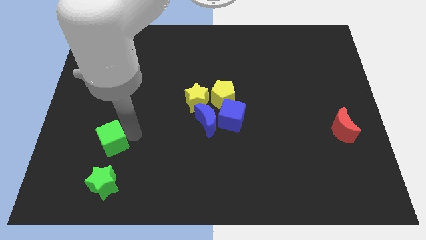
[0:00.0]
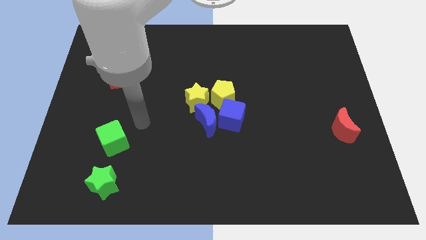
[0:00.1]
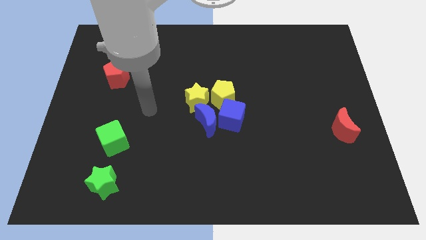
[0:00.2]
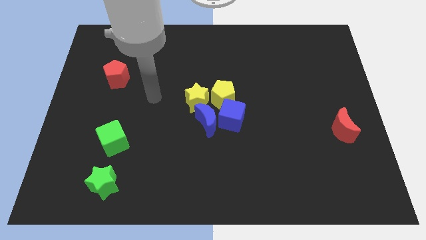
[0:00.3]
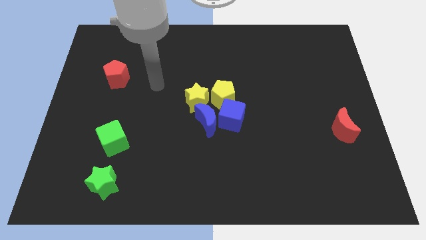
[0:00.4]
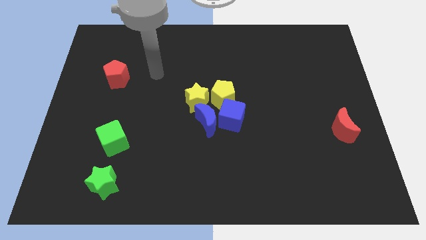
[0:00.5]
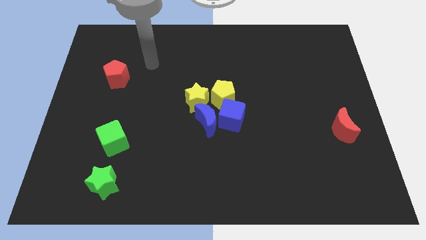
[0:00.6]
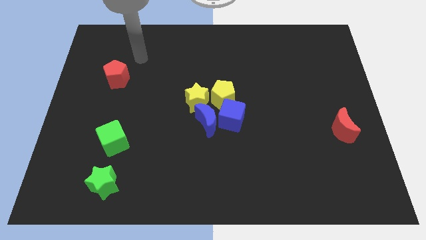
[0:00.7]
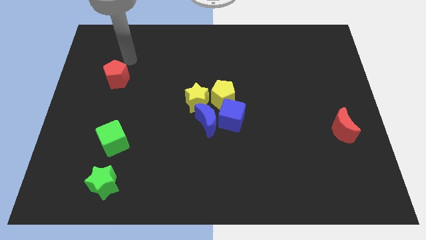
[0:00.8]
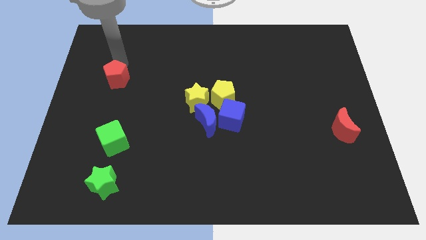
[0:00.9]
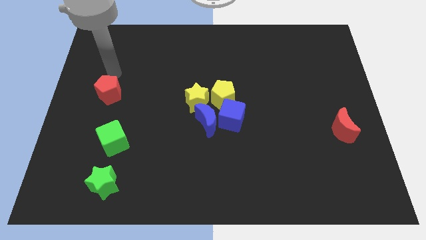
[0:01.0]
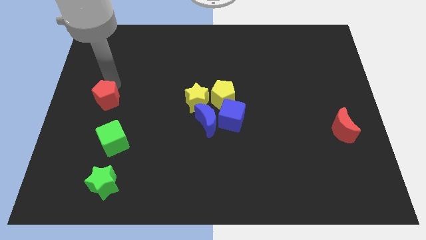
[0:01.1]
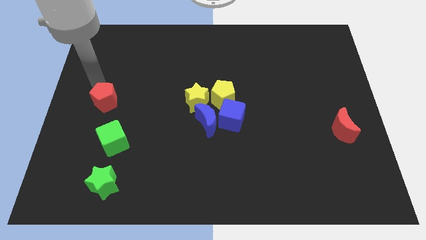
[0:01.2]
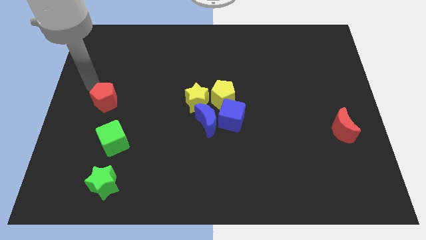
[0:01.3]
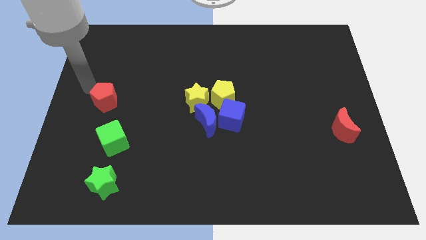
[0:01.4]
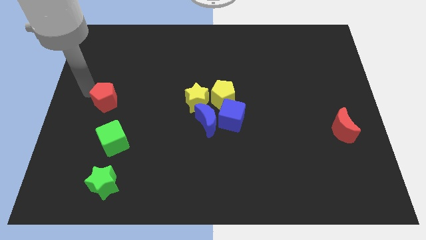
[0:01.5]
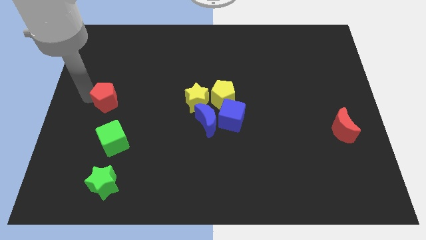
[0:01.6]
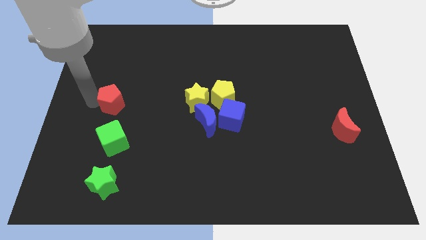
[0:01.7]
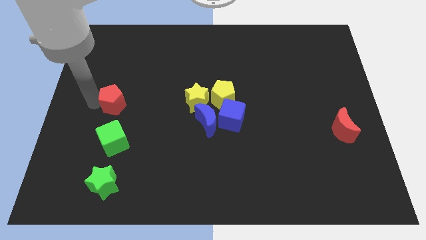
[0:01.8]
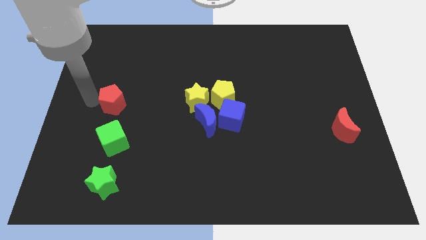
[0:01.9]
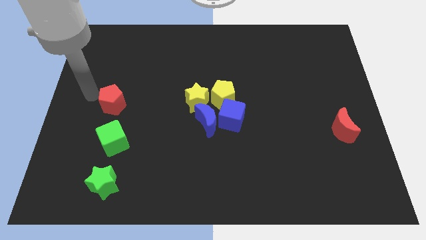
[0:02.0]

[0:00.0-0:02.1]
place the red pentagon at the top of green cube

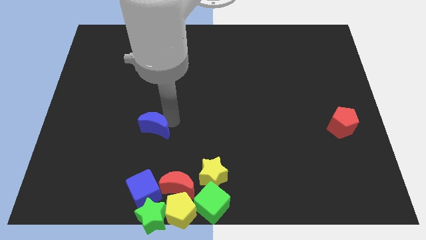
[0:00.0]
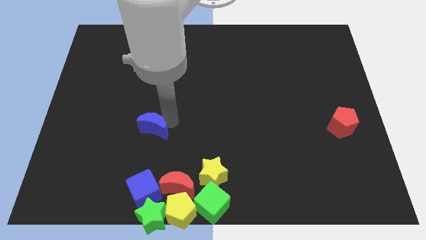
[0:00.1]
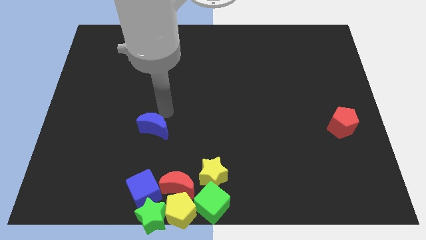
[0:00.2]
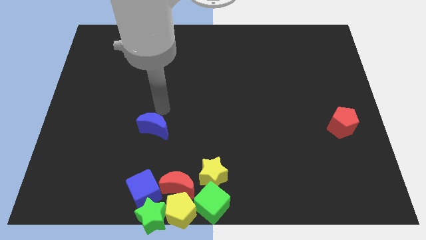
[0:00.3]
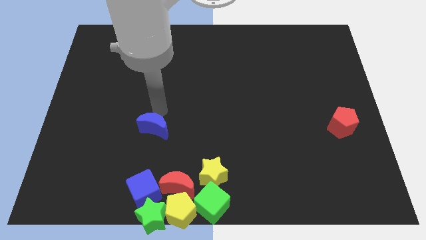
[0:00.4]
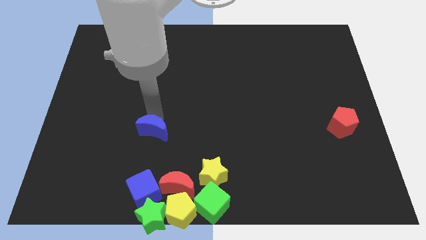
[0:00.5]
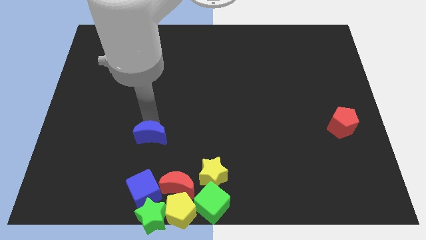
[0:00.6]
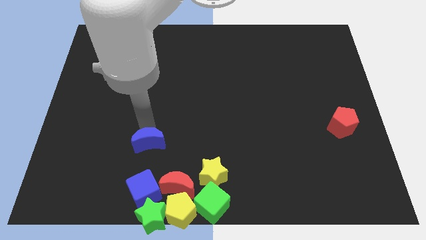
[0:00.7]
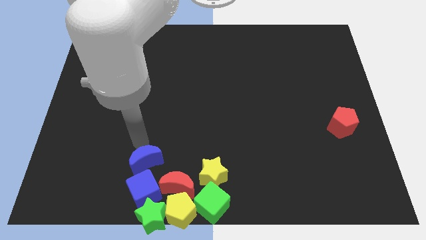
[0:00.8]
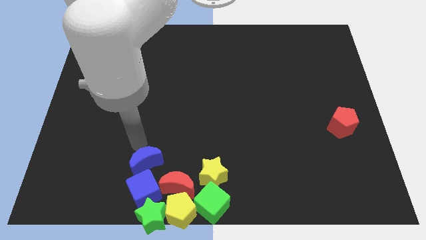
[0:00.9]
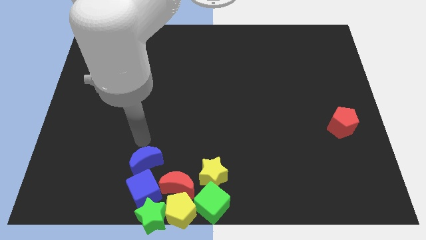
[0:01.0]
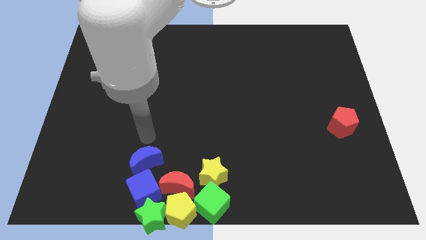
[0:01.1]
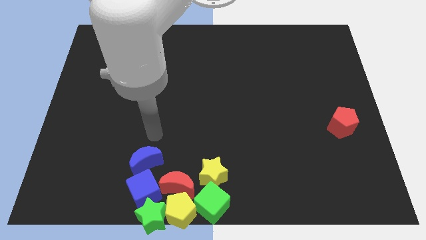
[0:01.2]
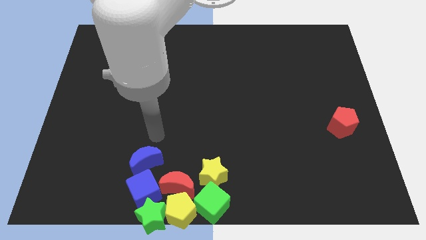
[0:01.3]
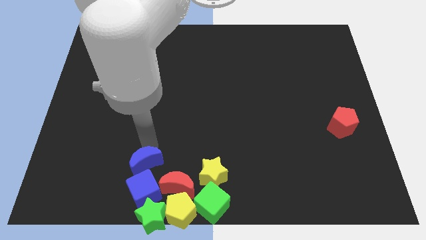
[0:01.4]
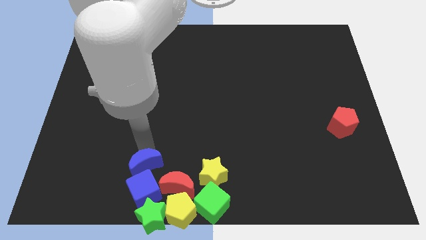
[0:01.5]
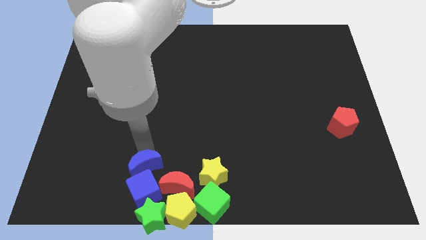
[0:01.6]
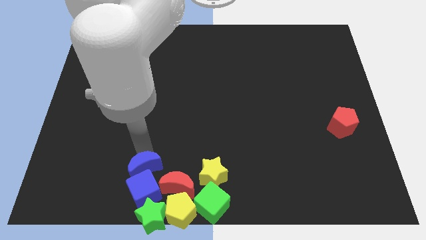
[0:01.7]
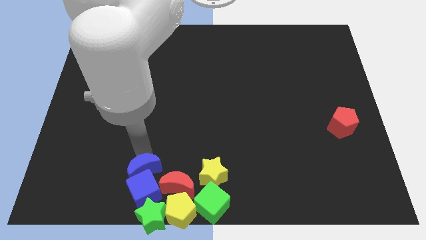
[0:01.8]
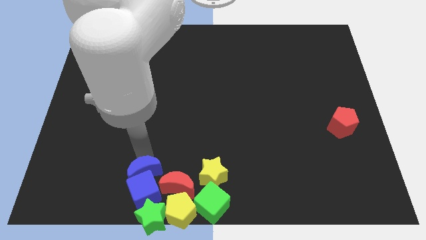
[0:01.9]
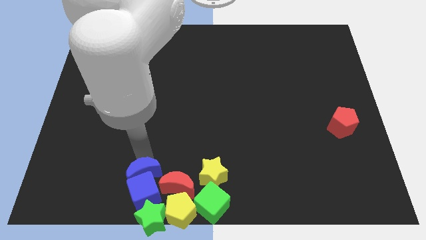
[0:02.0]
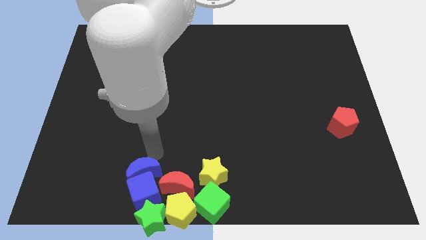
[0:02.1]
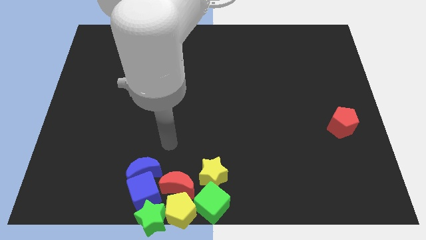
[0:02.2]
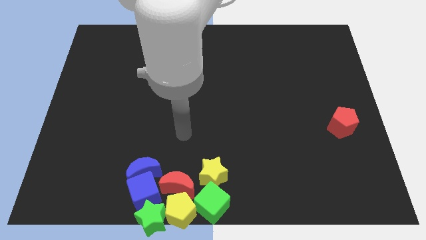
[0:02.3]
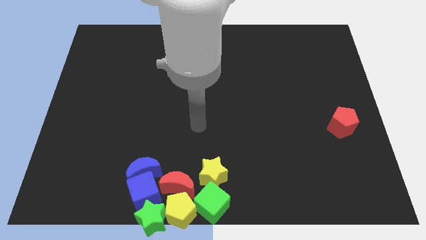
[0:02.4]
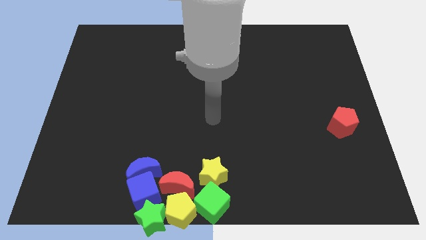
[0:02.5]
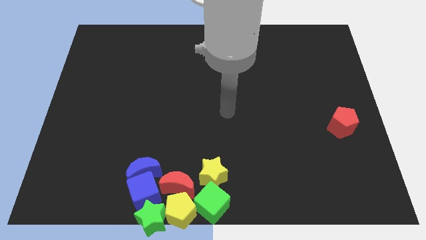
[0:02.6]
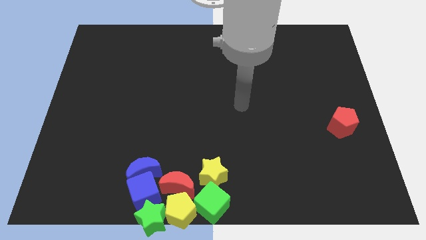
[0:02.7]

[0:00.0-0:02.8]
push the blue crescent into the top side of the blue cube

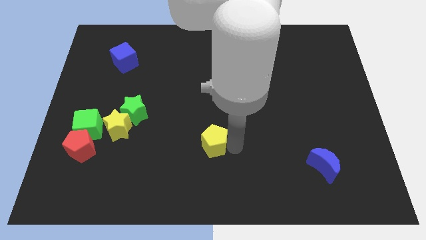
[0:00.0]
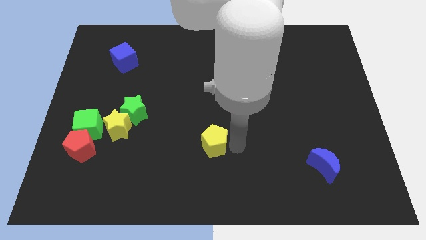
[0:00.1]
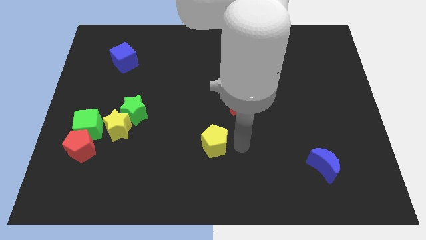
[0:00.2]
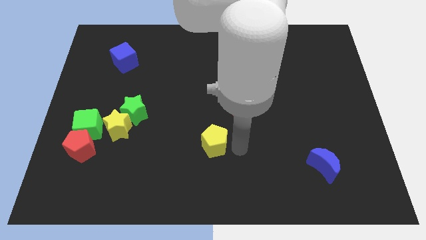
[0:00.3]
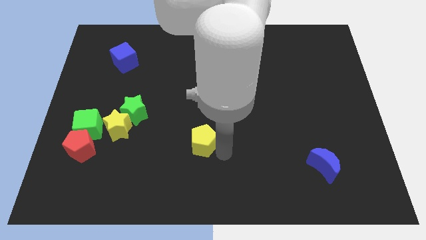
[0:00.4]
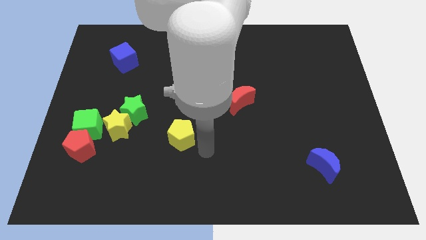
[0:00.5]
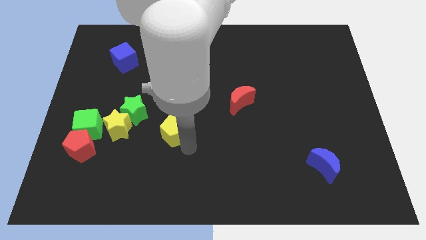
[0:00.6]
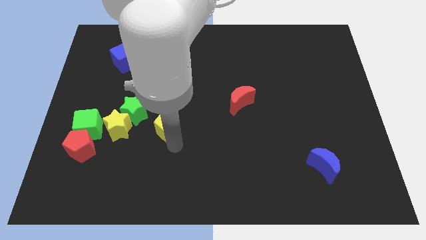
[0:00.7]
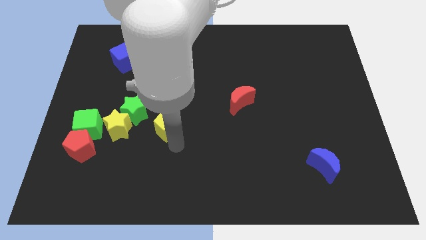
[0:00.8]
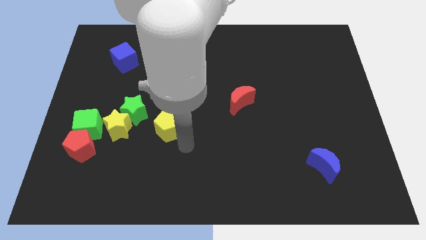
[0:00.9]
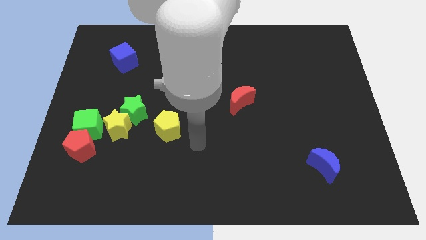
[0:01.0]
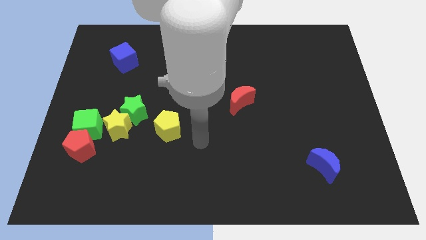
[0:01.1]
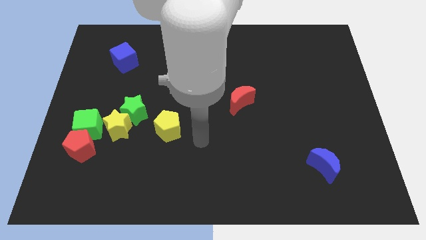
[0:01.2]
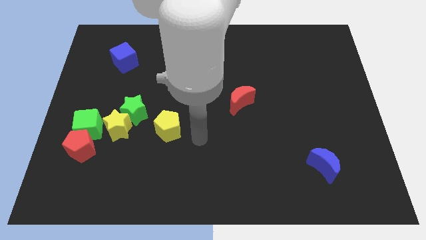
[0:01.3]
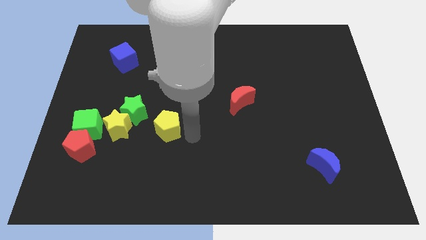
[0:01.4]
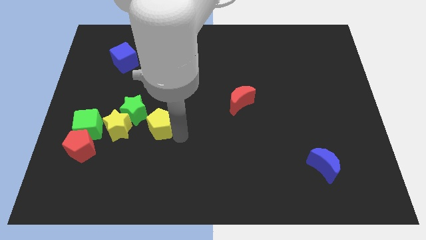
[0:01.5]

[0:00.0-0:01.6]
move the yellow pentagon towards the green star

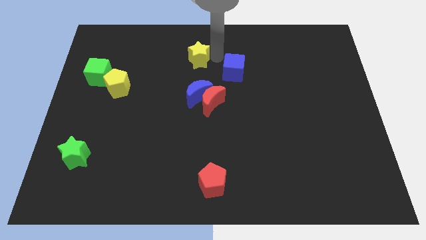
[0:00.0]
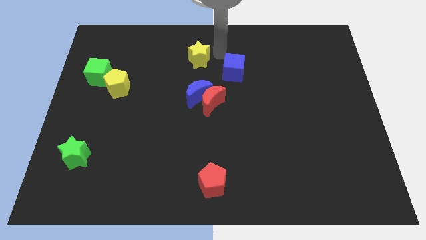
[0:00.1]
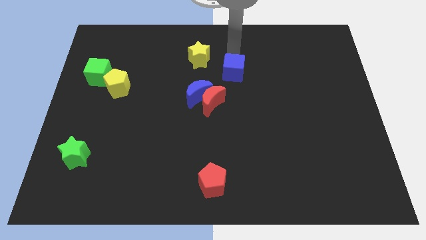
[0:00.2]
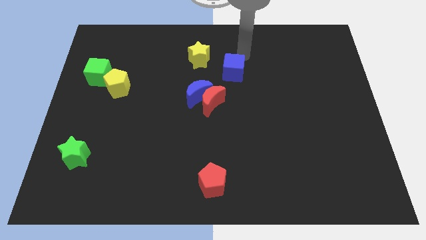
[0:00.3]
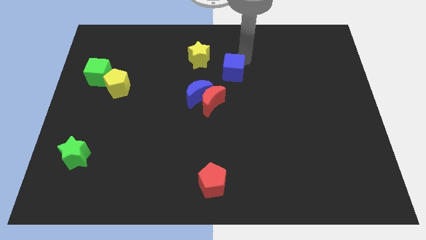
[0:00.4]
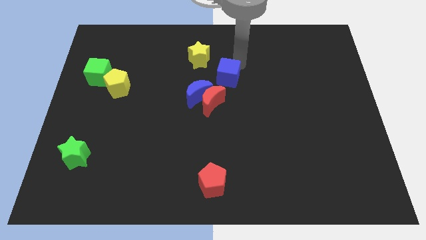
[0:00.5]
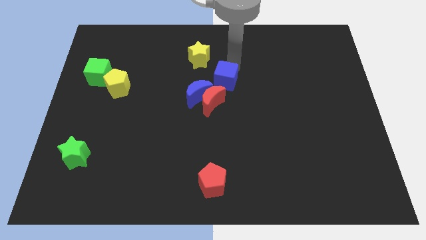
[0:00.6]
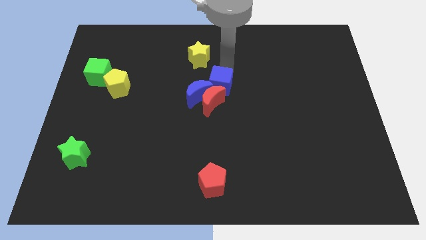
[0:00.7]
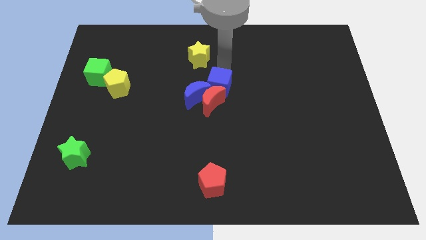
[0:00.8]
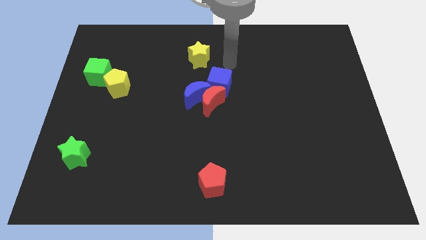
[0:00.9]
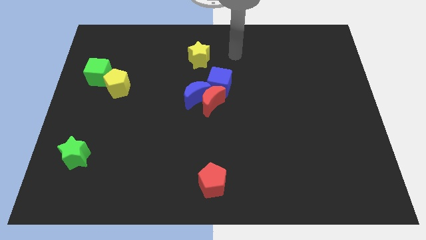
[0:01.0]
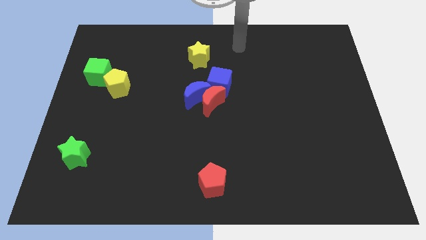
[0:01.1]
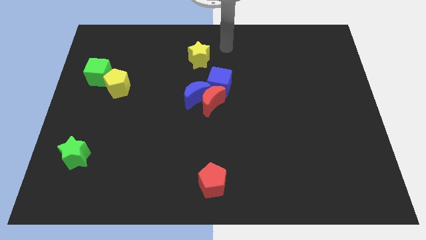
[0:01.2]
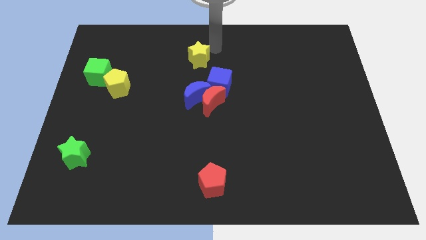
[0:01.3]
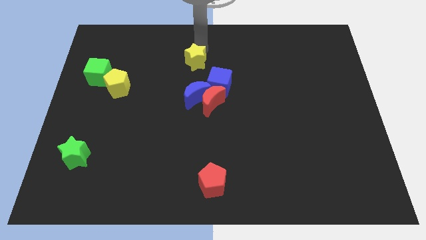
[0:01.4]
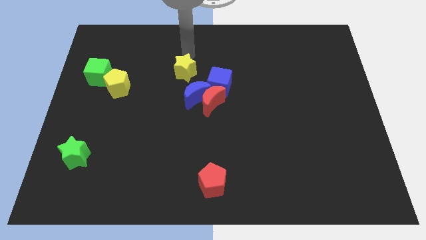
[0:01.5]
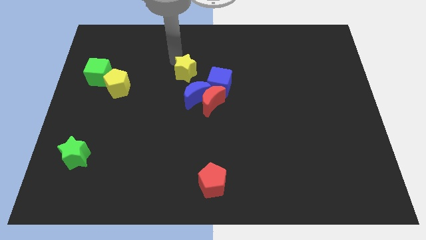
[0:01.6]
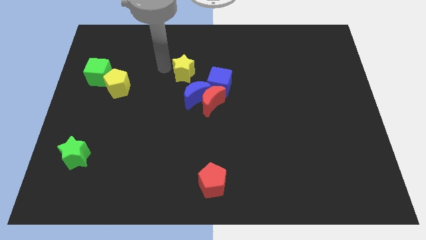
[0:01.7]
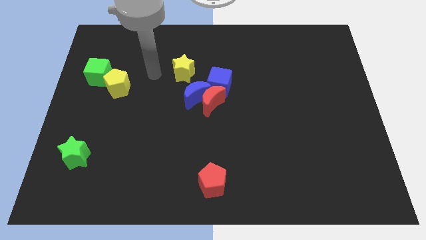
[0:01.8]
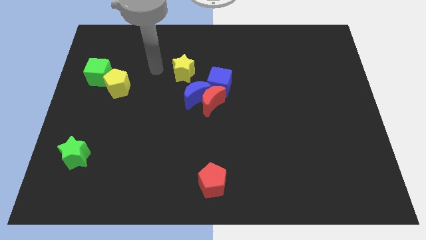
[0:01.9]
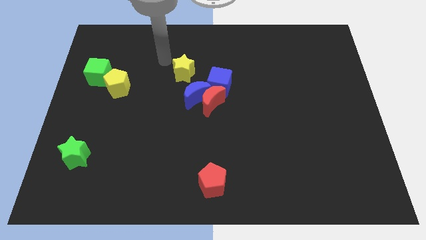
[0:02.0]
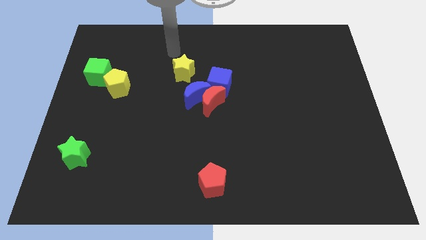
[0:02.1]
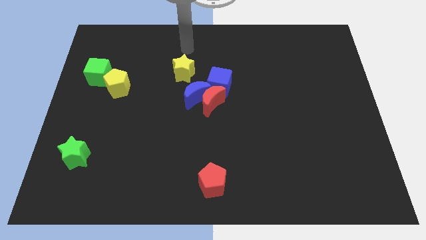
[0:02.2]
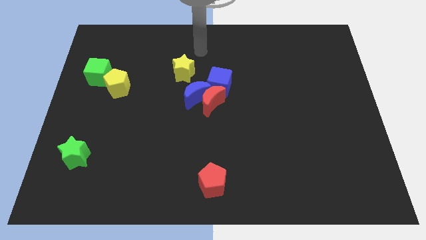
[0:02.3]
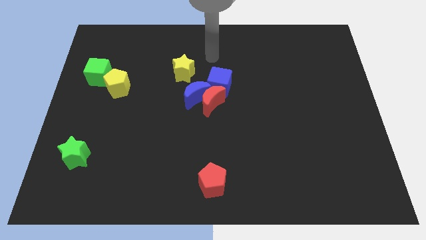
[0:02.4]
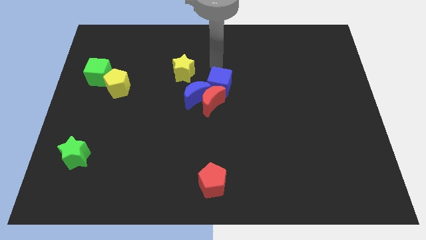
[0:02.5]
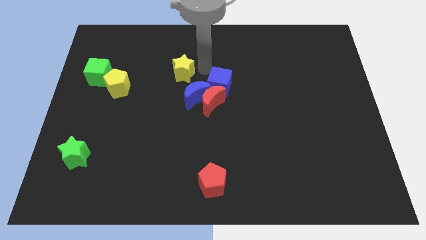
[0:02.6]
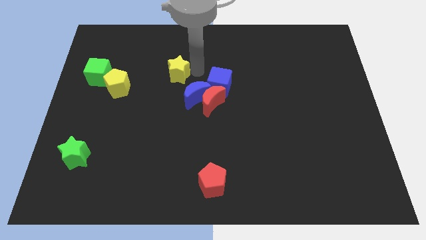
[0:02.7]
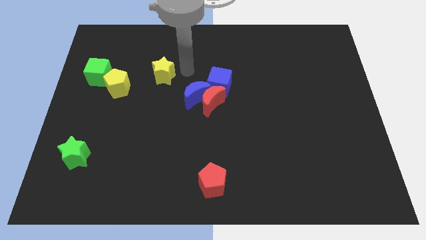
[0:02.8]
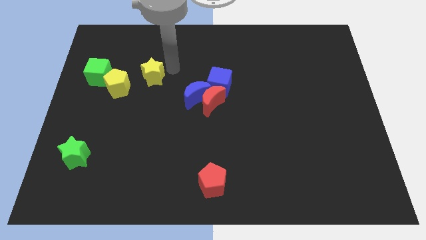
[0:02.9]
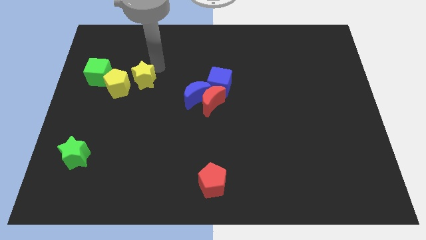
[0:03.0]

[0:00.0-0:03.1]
move the blue cube and the yellow star down slightly
